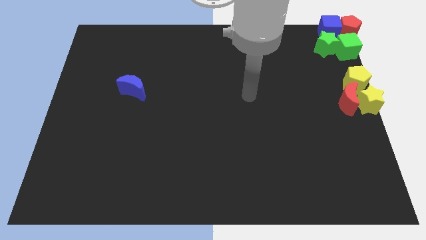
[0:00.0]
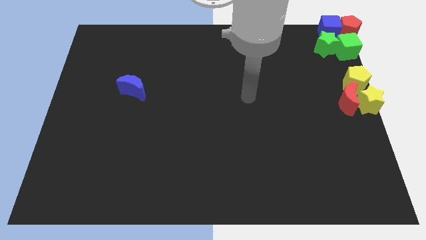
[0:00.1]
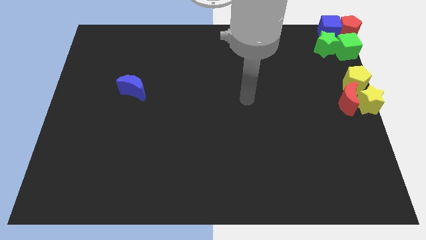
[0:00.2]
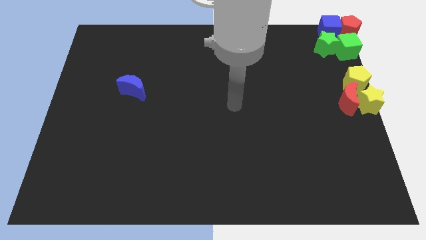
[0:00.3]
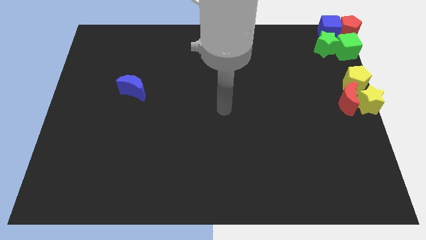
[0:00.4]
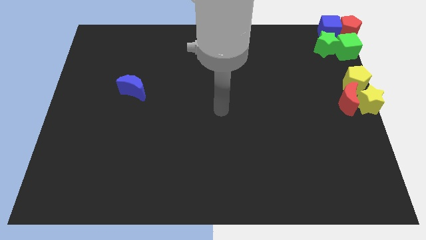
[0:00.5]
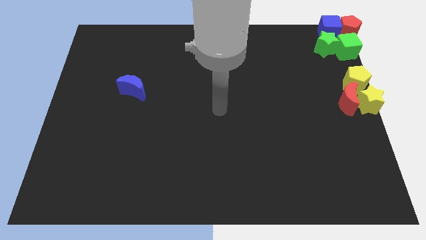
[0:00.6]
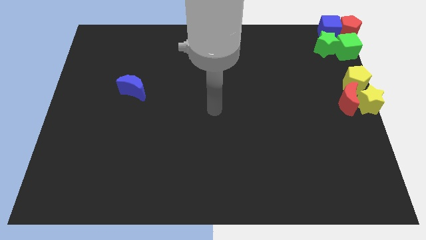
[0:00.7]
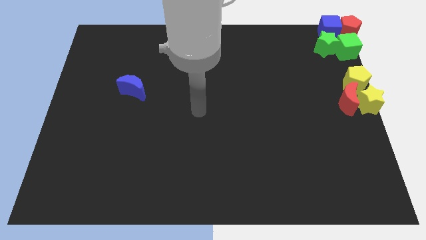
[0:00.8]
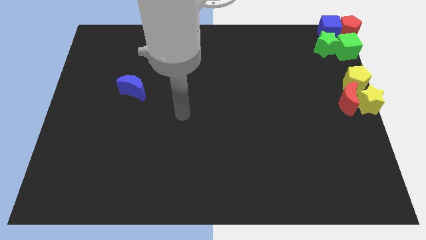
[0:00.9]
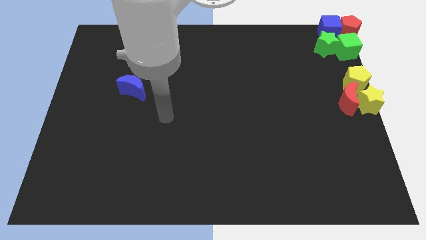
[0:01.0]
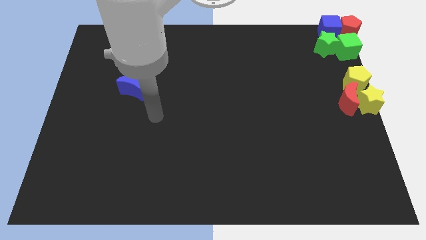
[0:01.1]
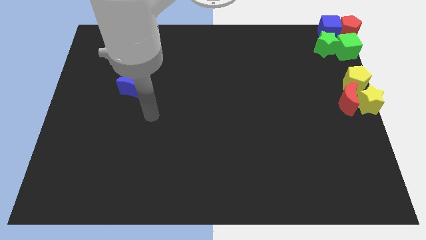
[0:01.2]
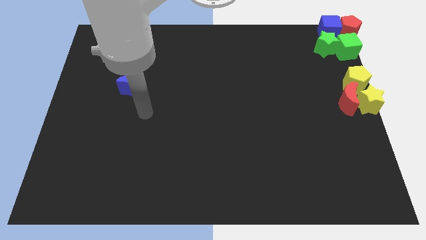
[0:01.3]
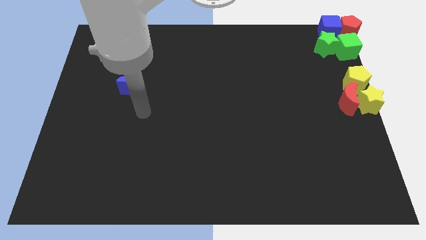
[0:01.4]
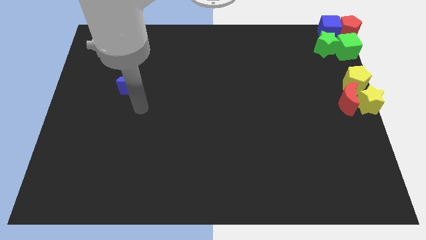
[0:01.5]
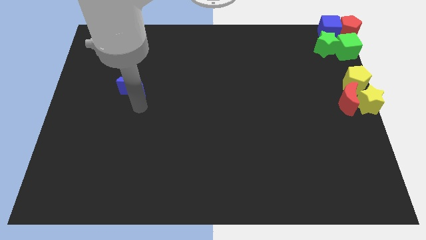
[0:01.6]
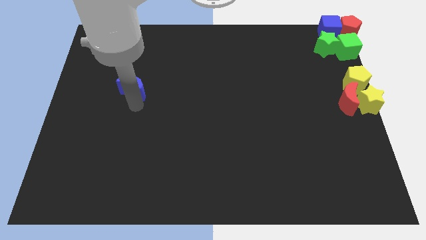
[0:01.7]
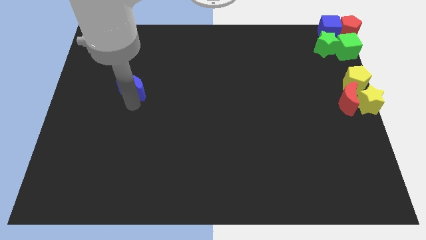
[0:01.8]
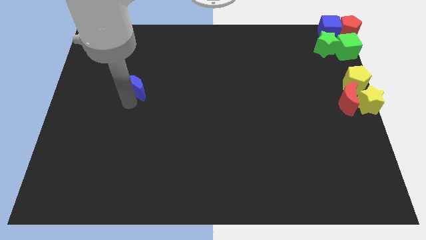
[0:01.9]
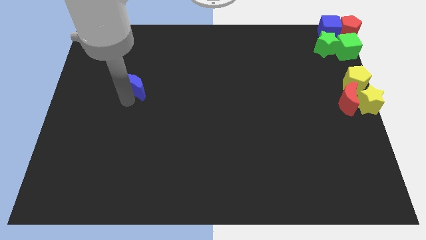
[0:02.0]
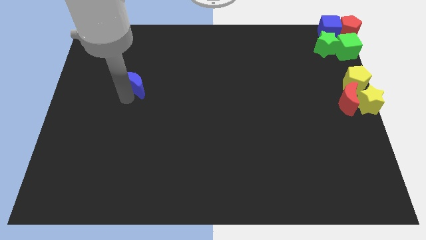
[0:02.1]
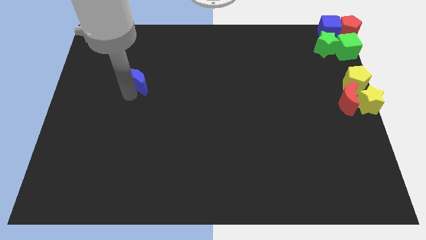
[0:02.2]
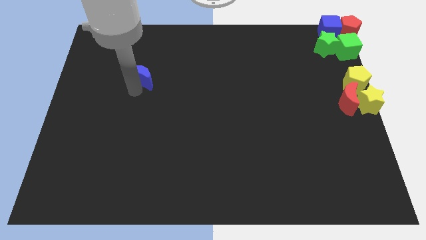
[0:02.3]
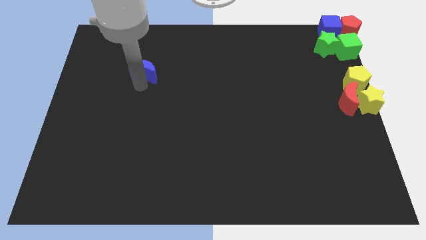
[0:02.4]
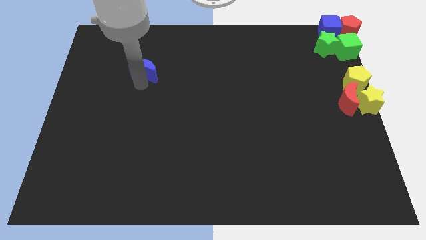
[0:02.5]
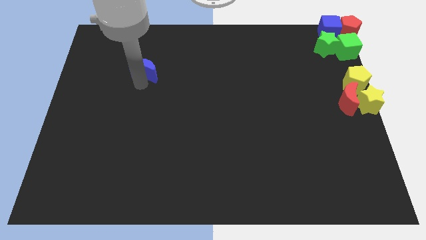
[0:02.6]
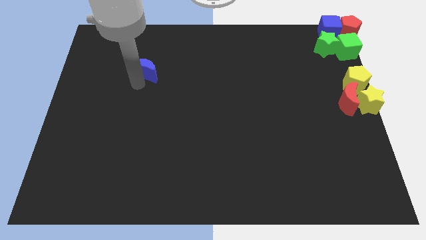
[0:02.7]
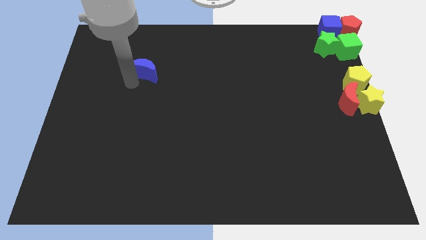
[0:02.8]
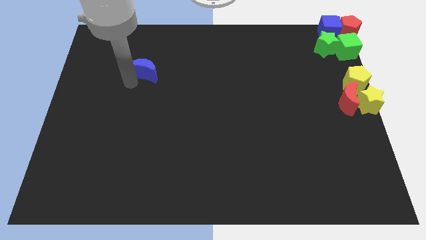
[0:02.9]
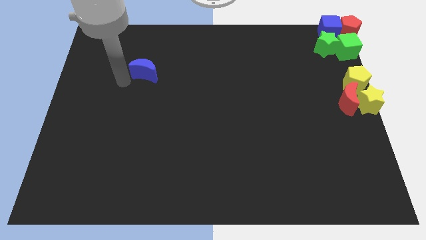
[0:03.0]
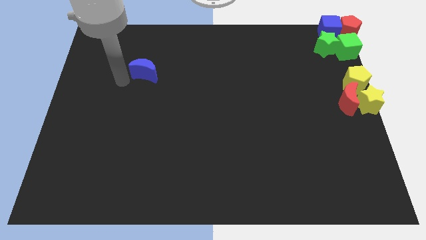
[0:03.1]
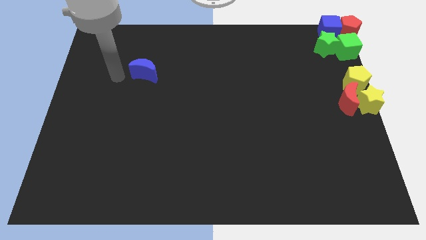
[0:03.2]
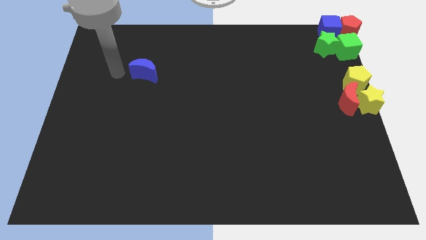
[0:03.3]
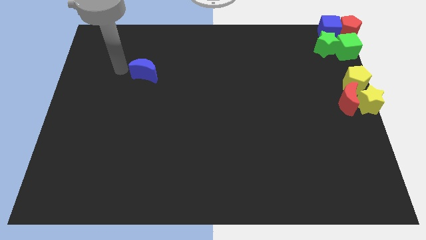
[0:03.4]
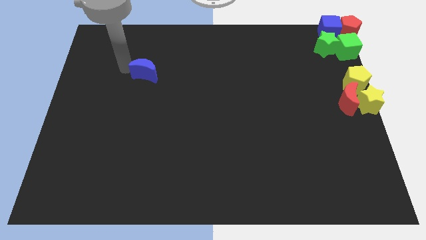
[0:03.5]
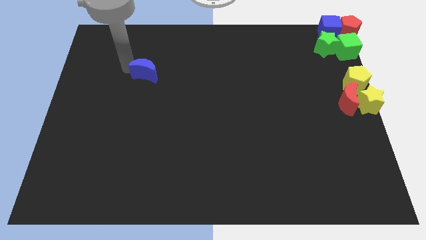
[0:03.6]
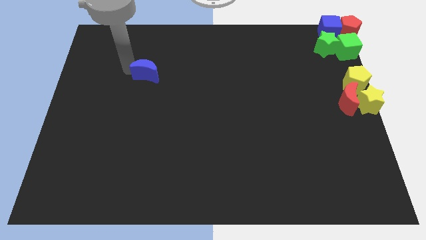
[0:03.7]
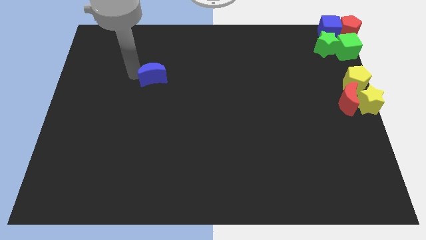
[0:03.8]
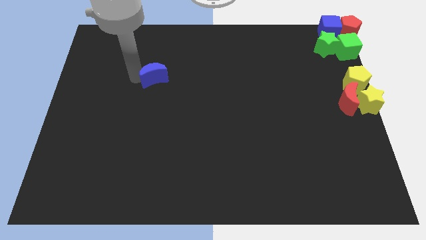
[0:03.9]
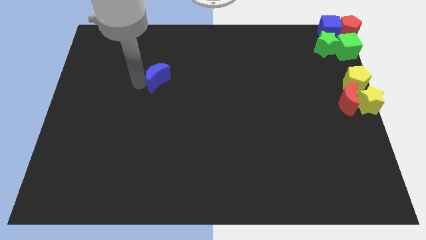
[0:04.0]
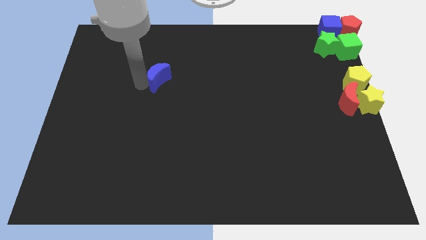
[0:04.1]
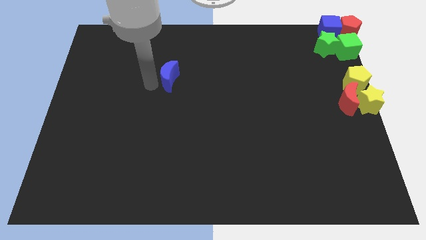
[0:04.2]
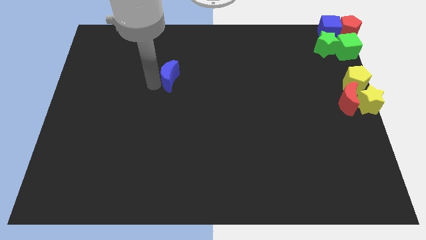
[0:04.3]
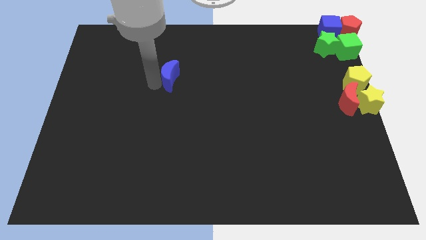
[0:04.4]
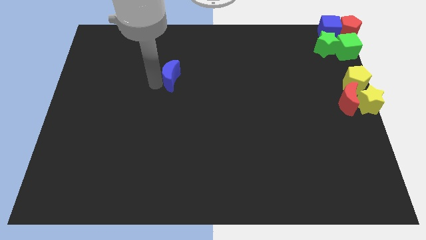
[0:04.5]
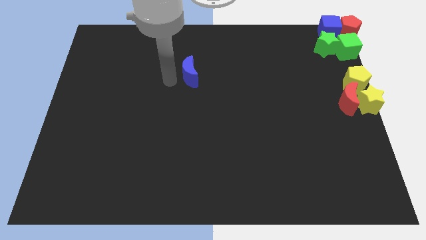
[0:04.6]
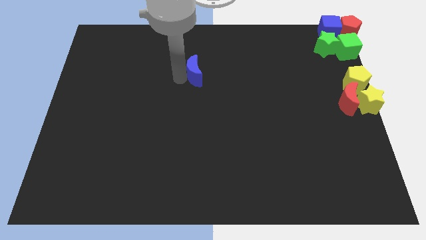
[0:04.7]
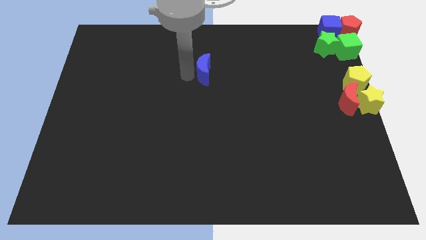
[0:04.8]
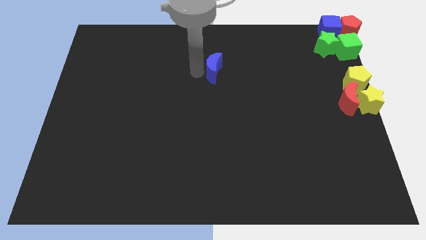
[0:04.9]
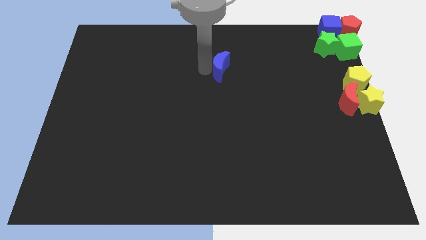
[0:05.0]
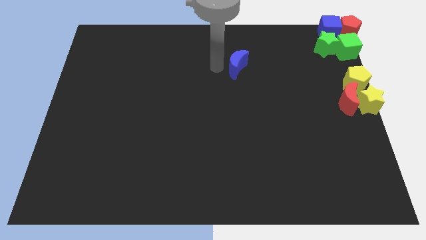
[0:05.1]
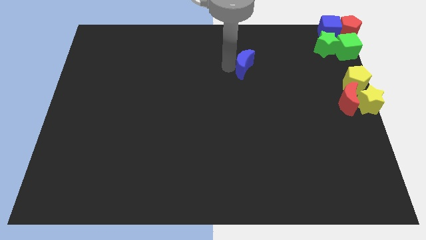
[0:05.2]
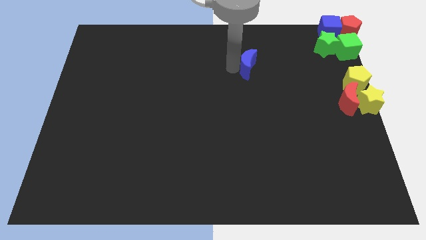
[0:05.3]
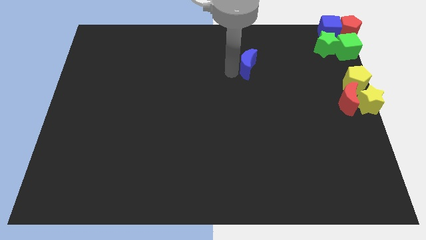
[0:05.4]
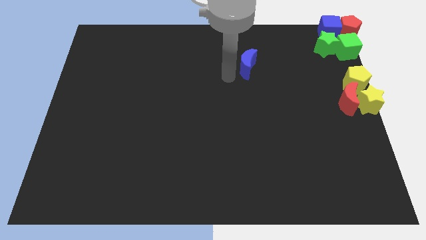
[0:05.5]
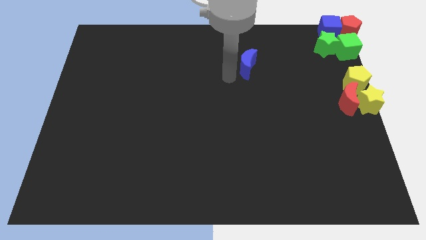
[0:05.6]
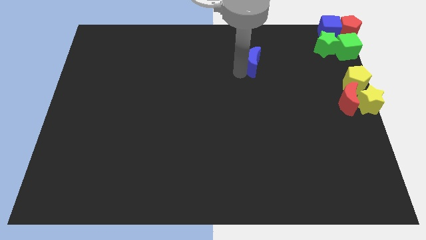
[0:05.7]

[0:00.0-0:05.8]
push the blue moon towards the right side of the board

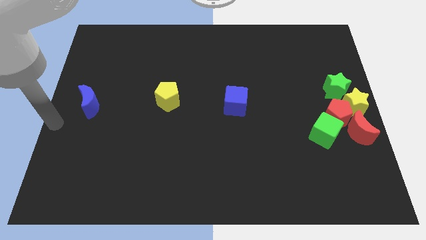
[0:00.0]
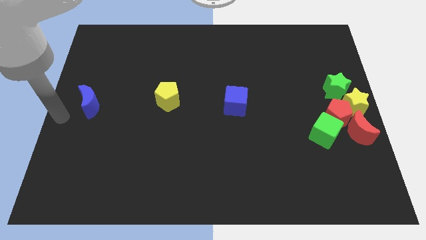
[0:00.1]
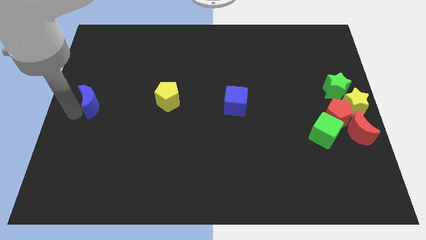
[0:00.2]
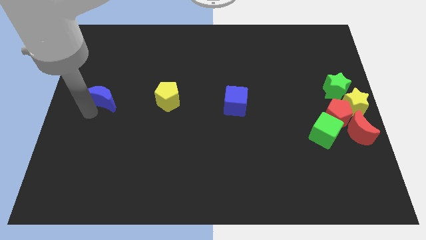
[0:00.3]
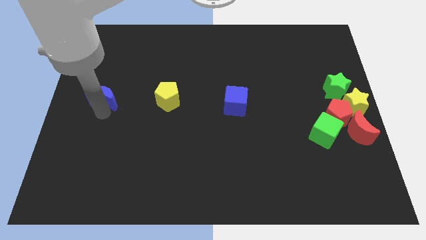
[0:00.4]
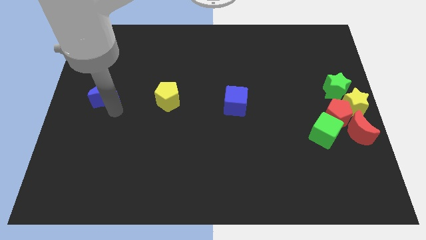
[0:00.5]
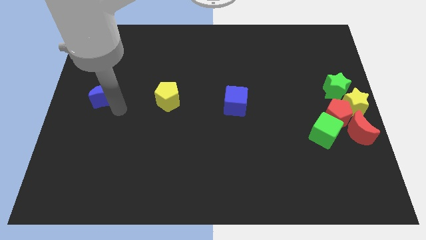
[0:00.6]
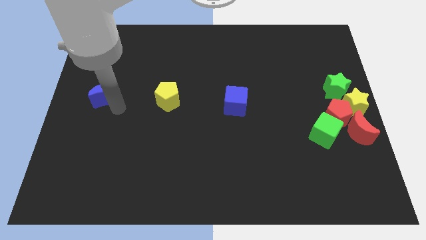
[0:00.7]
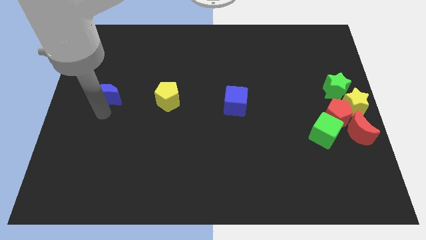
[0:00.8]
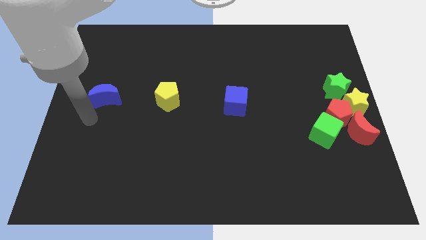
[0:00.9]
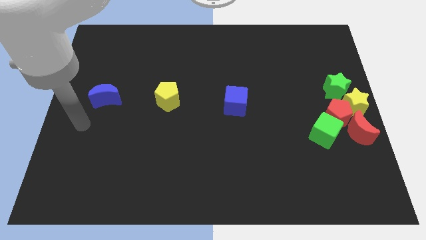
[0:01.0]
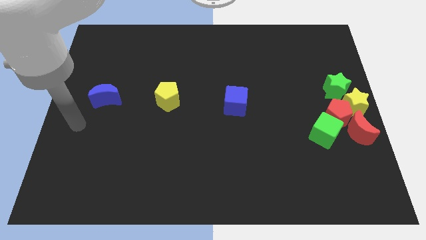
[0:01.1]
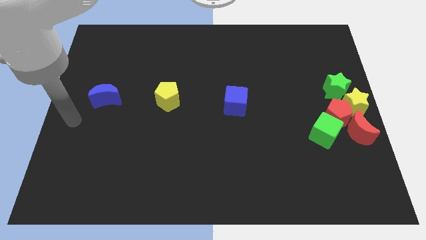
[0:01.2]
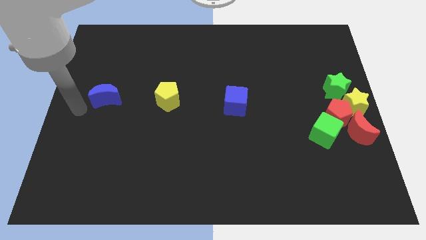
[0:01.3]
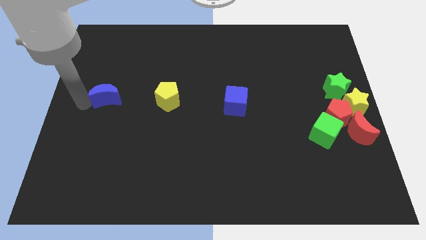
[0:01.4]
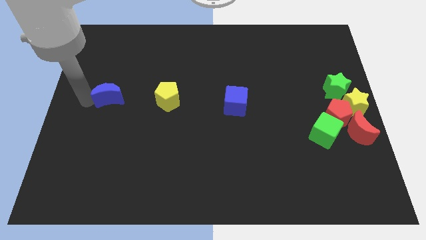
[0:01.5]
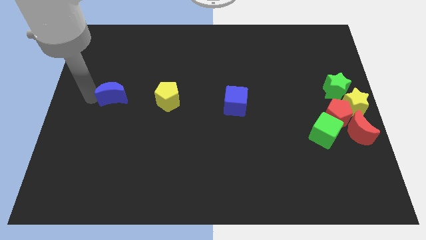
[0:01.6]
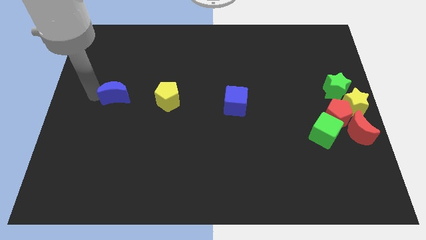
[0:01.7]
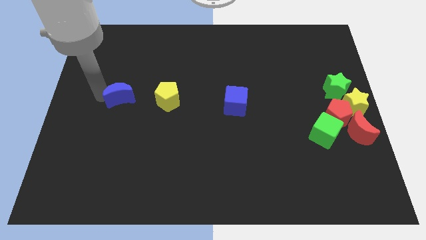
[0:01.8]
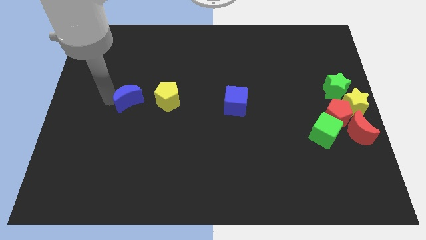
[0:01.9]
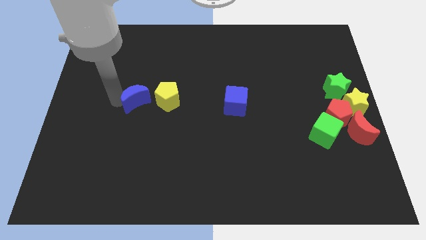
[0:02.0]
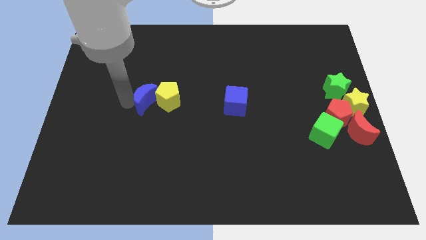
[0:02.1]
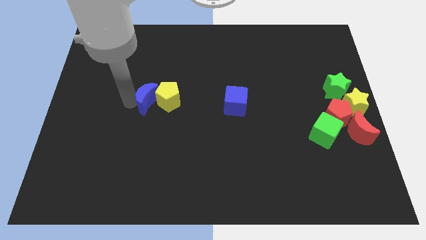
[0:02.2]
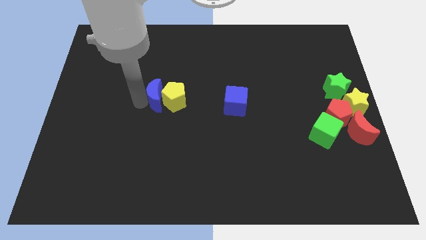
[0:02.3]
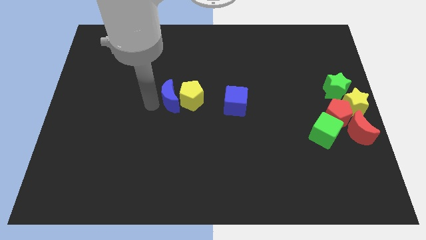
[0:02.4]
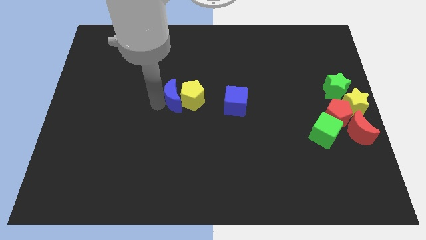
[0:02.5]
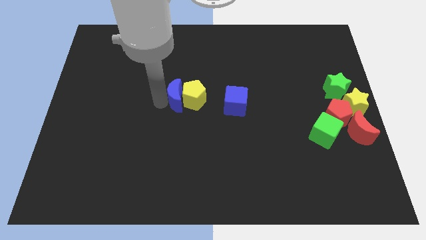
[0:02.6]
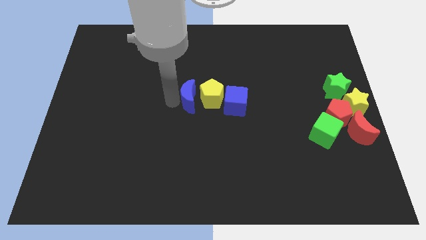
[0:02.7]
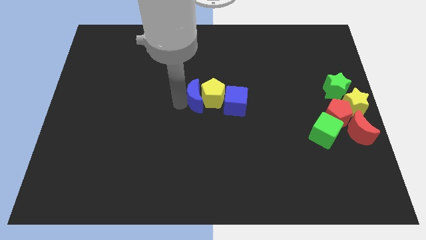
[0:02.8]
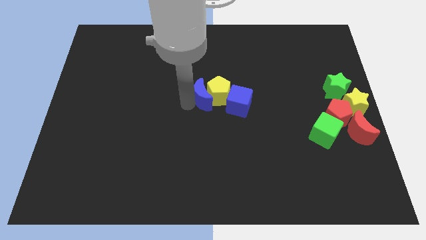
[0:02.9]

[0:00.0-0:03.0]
push the blue moon into the yellow pentagon

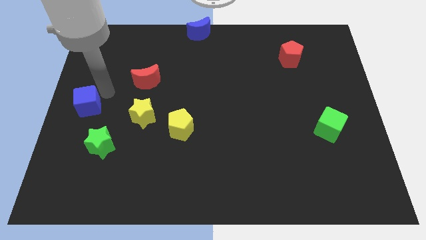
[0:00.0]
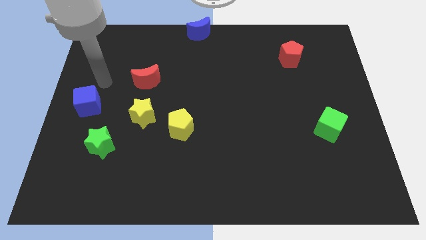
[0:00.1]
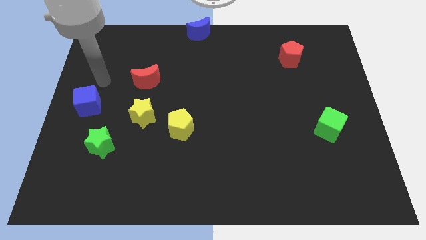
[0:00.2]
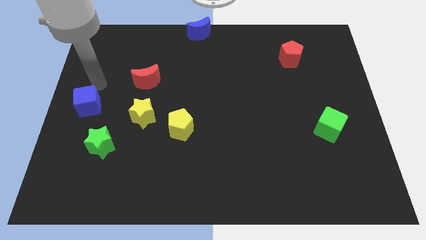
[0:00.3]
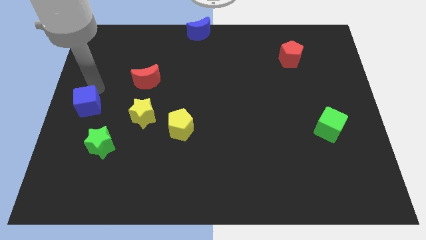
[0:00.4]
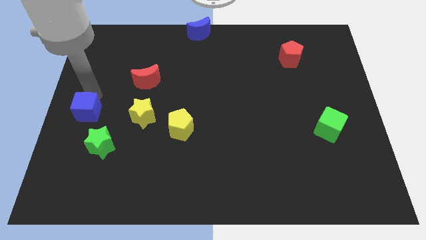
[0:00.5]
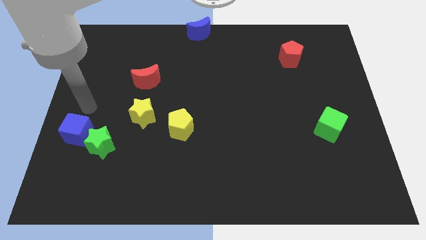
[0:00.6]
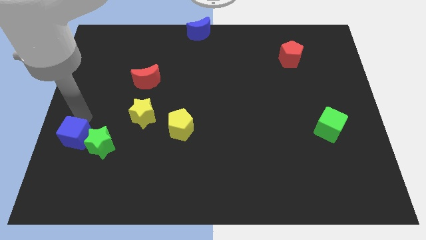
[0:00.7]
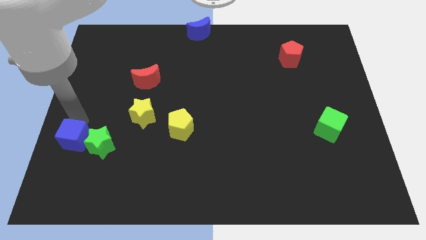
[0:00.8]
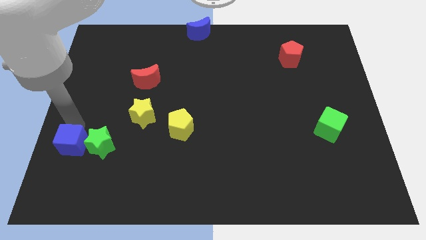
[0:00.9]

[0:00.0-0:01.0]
place blue cube to the left of green star
